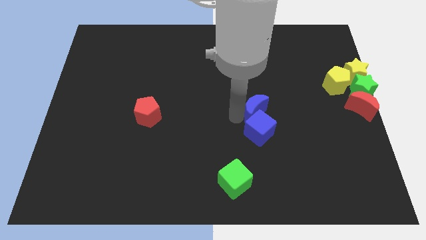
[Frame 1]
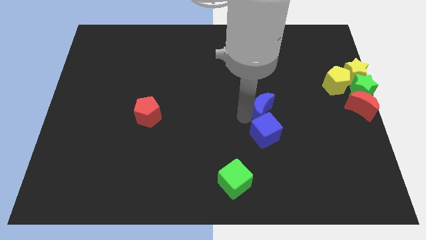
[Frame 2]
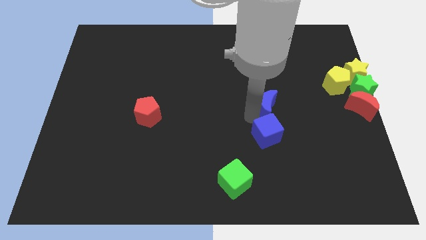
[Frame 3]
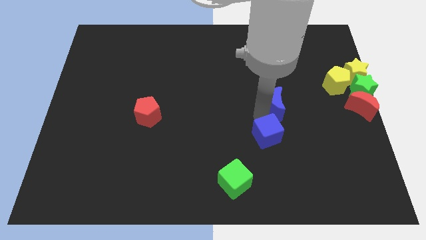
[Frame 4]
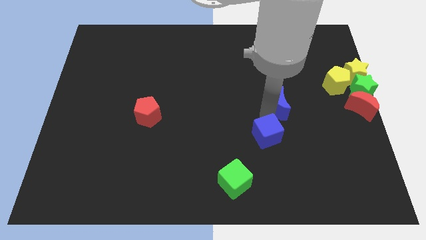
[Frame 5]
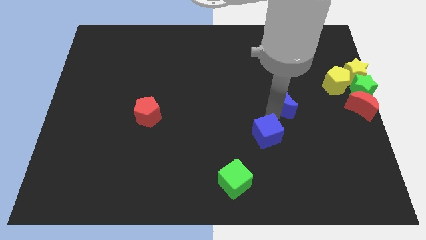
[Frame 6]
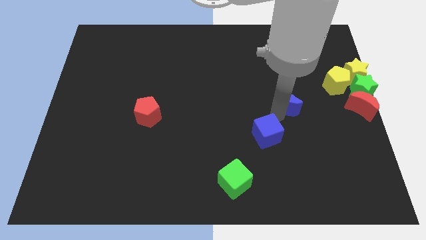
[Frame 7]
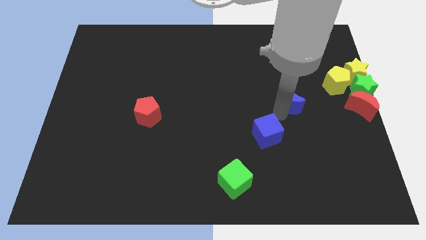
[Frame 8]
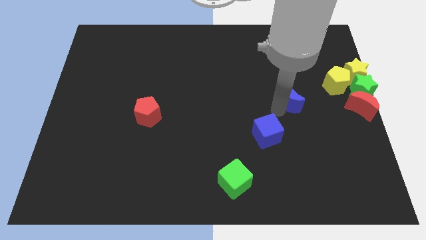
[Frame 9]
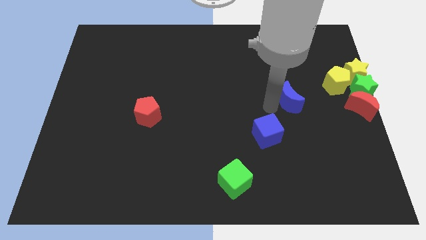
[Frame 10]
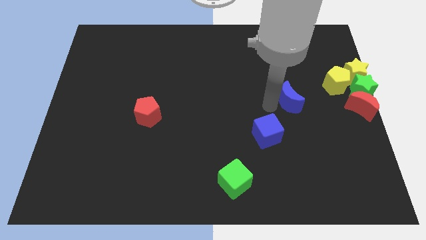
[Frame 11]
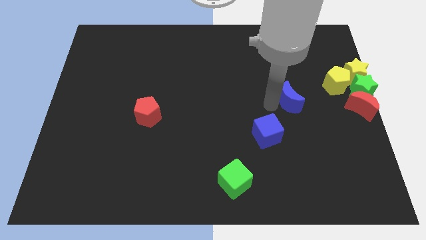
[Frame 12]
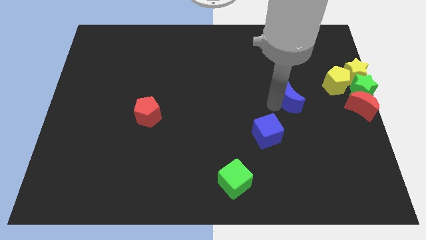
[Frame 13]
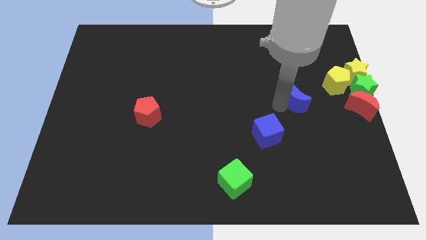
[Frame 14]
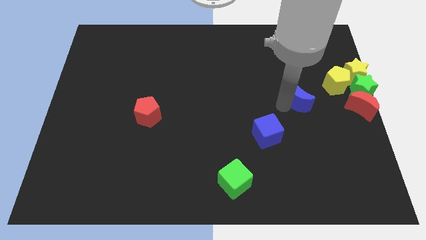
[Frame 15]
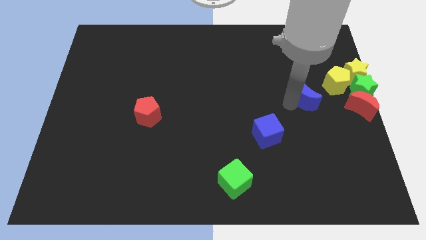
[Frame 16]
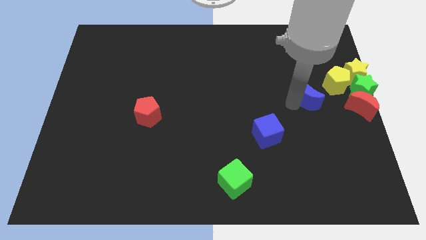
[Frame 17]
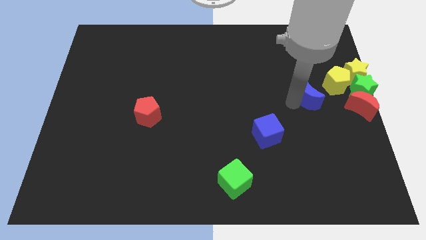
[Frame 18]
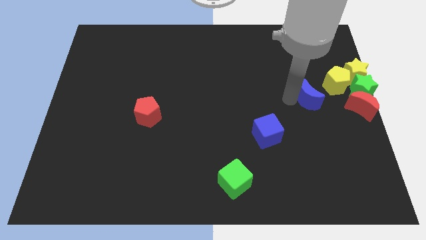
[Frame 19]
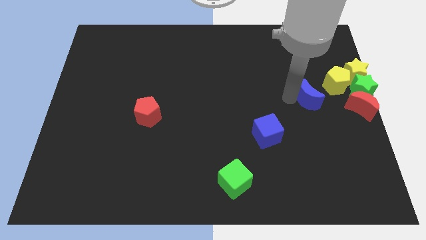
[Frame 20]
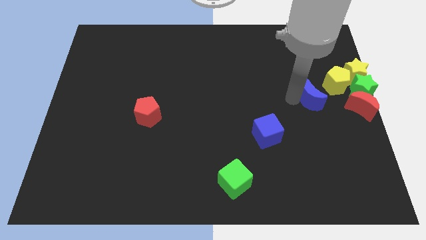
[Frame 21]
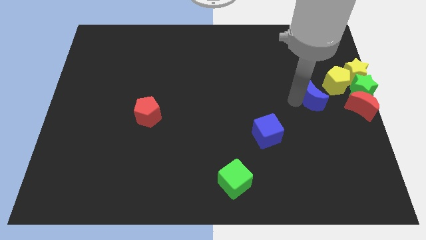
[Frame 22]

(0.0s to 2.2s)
push the blue moon away from the blue cube

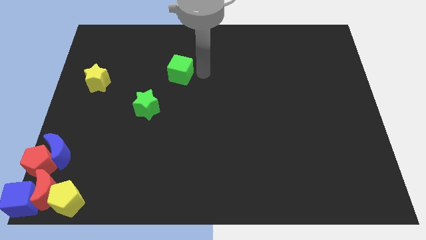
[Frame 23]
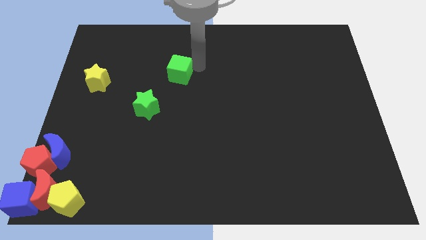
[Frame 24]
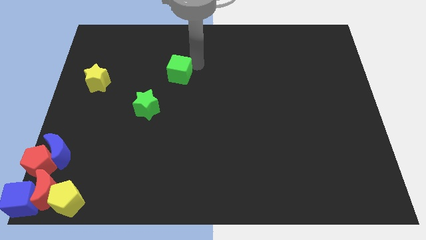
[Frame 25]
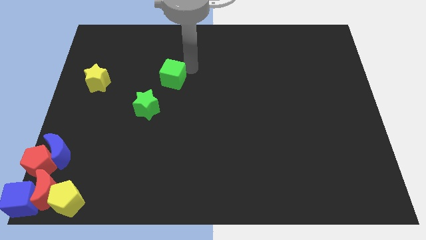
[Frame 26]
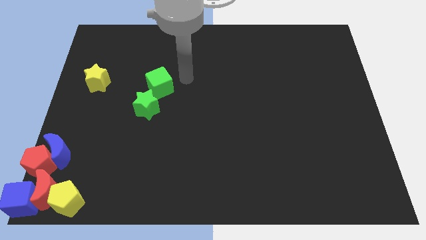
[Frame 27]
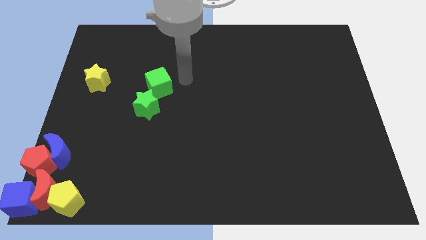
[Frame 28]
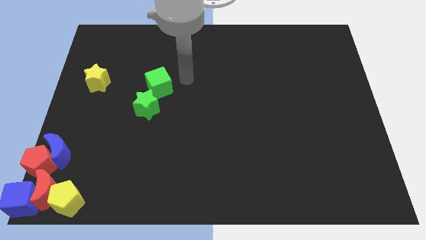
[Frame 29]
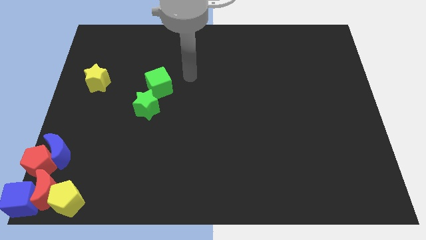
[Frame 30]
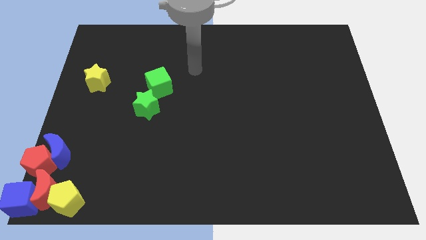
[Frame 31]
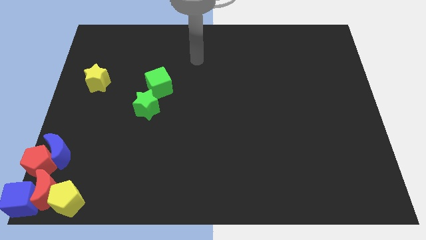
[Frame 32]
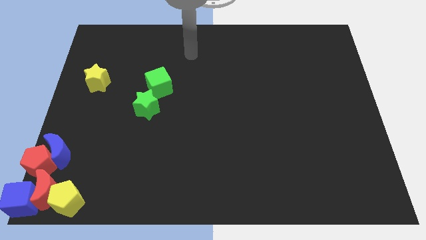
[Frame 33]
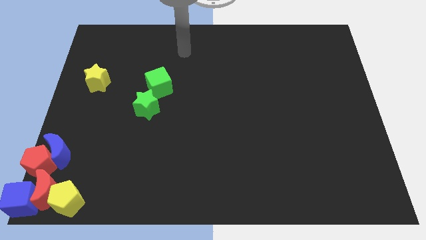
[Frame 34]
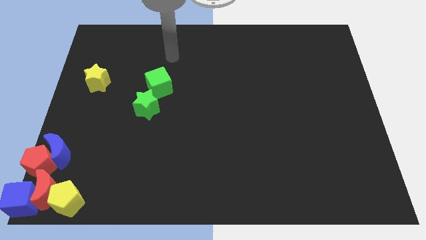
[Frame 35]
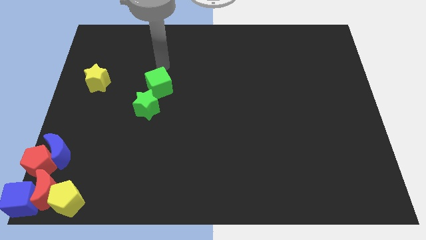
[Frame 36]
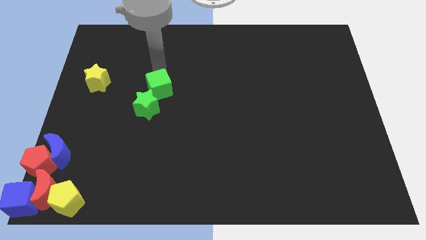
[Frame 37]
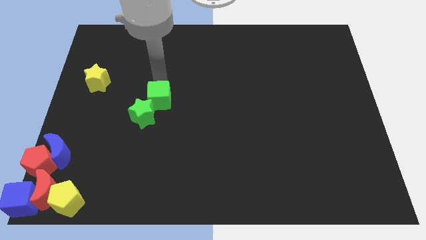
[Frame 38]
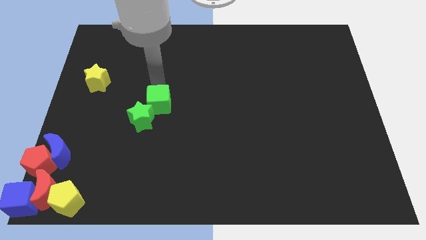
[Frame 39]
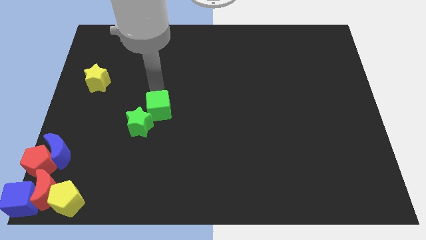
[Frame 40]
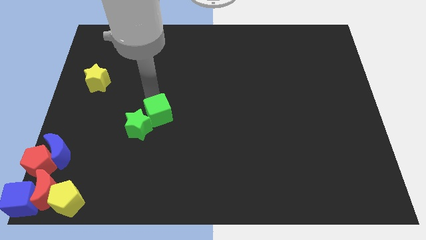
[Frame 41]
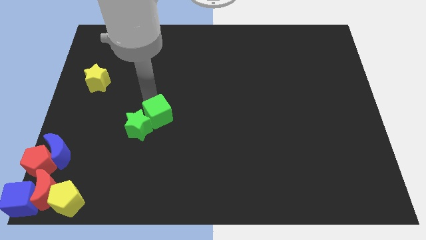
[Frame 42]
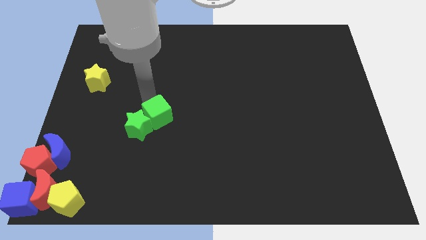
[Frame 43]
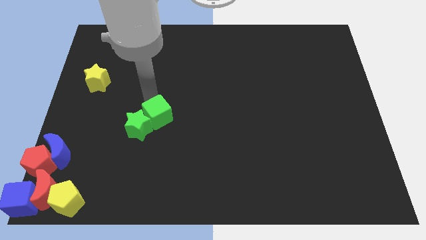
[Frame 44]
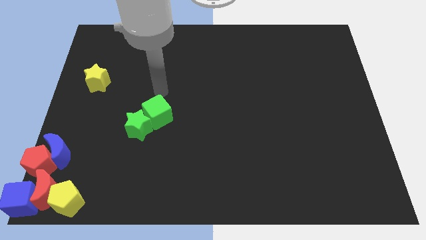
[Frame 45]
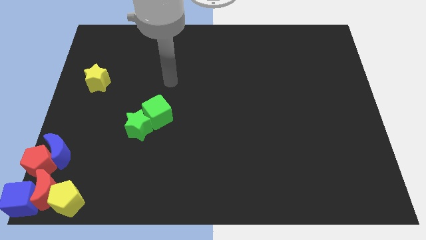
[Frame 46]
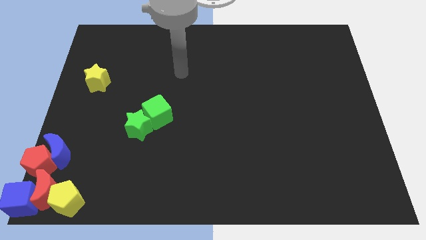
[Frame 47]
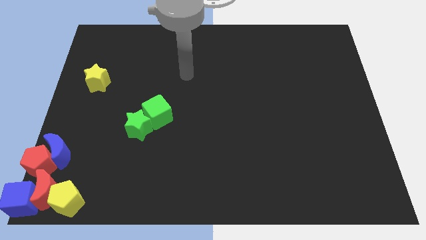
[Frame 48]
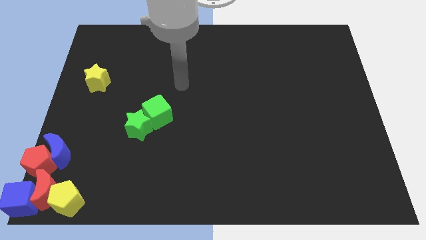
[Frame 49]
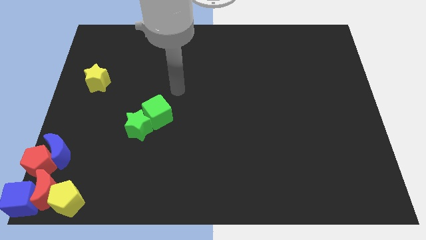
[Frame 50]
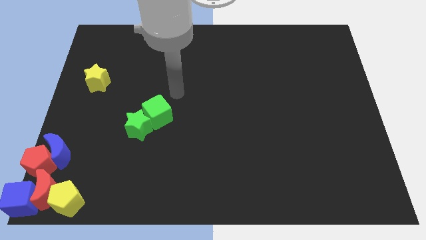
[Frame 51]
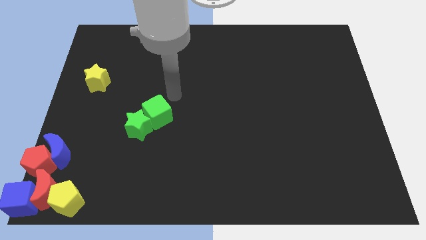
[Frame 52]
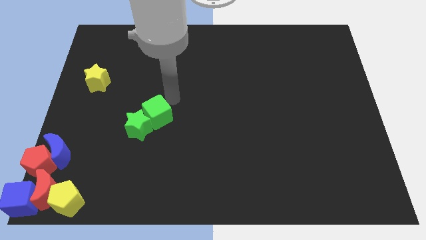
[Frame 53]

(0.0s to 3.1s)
push the green cube into the green star

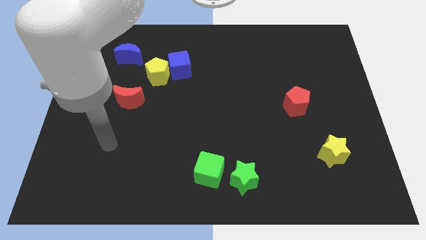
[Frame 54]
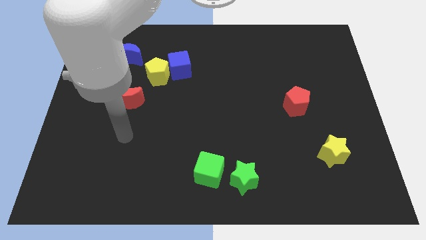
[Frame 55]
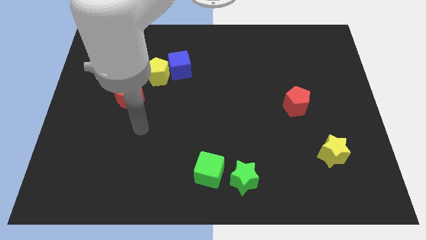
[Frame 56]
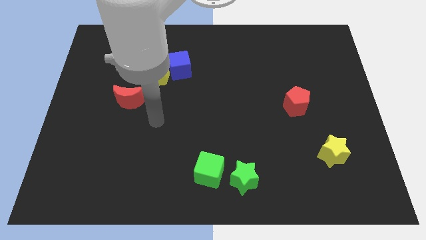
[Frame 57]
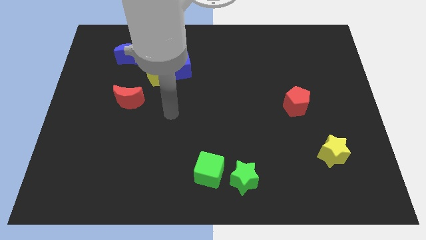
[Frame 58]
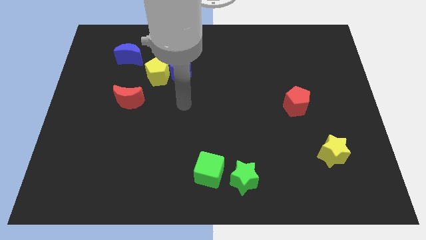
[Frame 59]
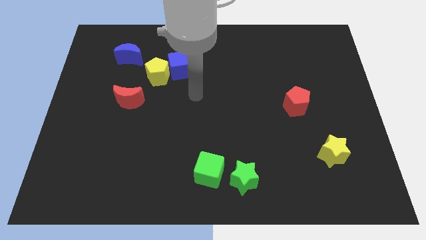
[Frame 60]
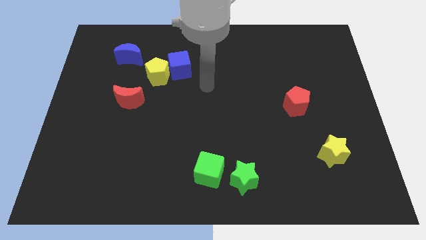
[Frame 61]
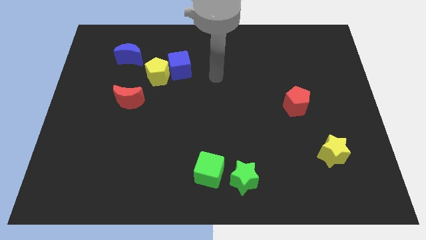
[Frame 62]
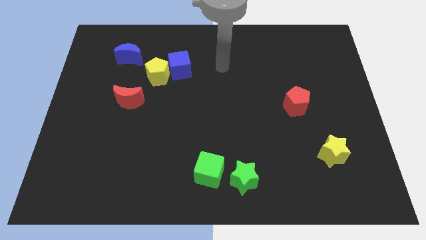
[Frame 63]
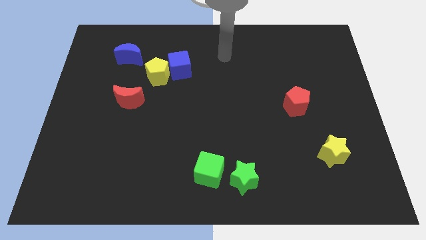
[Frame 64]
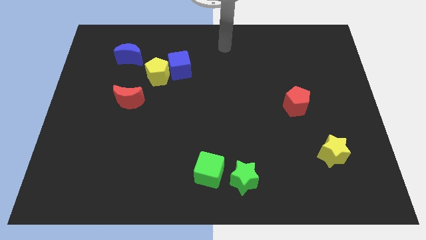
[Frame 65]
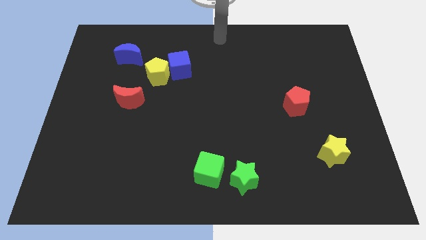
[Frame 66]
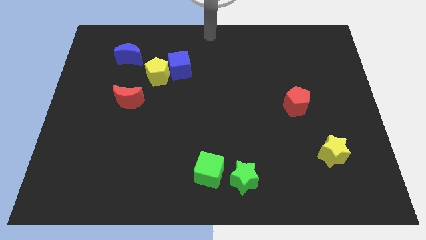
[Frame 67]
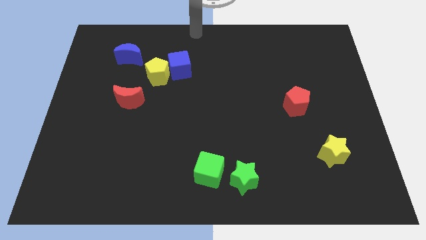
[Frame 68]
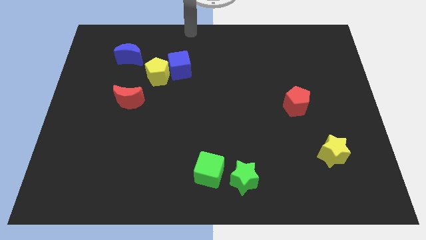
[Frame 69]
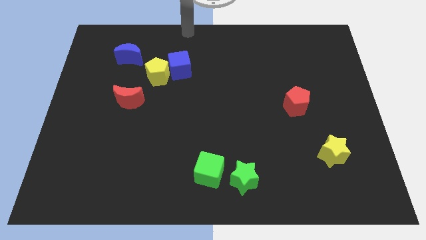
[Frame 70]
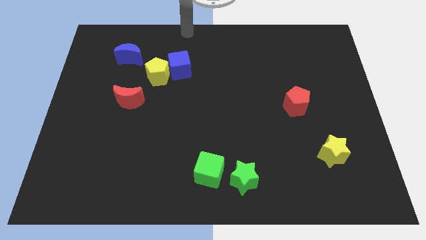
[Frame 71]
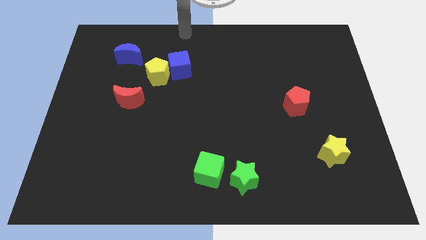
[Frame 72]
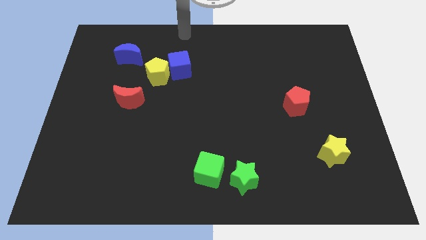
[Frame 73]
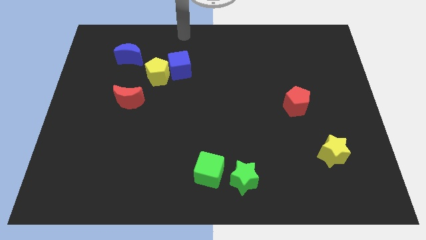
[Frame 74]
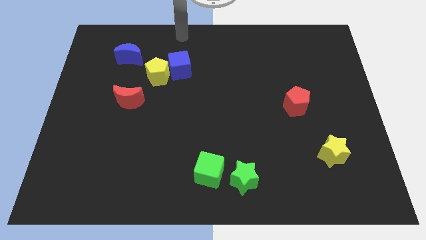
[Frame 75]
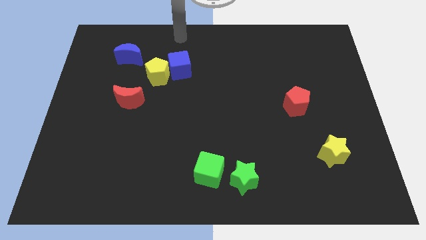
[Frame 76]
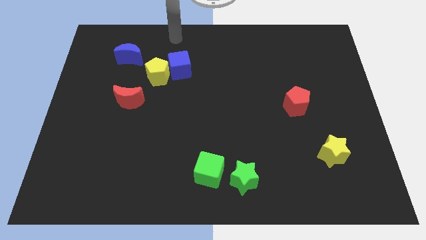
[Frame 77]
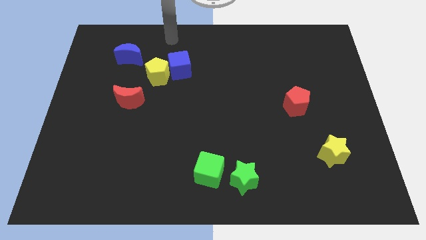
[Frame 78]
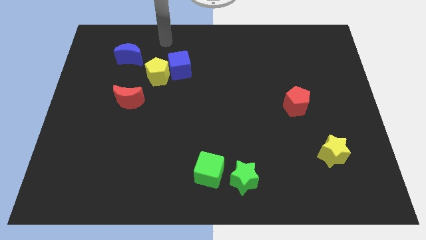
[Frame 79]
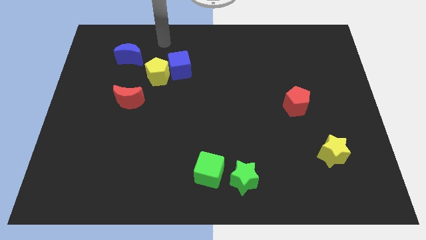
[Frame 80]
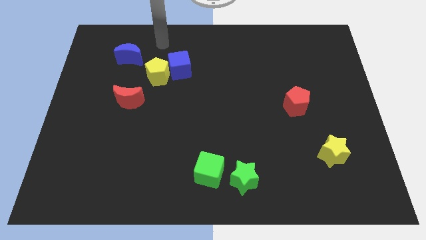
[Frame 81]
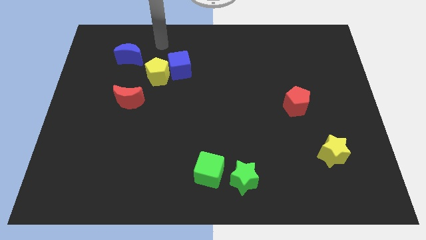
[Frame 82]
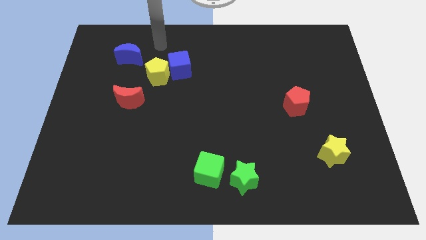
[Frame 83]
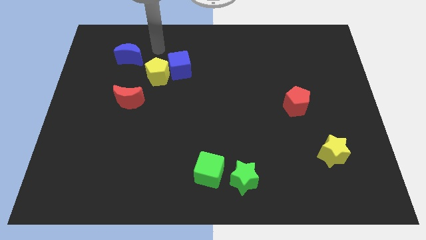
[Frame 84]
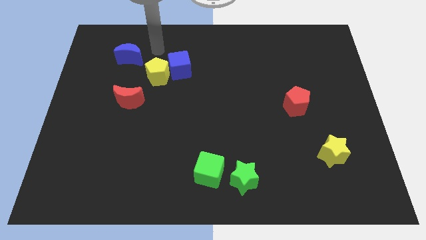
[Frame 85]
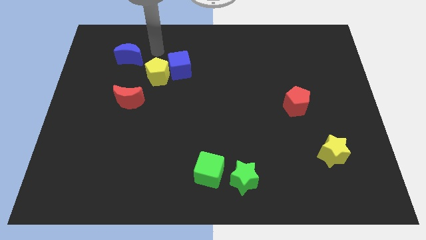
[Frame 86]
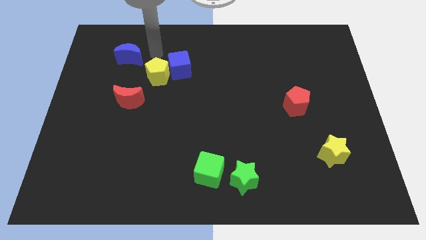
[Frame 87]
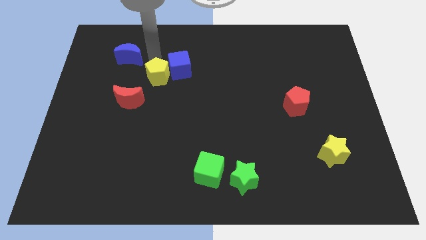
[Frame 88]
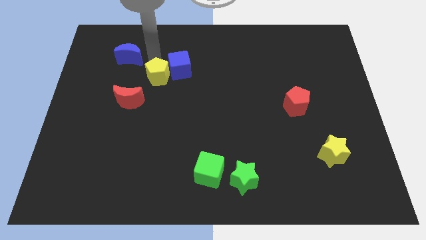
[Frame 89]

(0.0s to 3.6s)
move your arm above the yellow pentagon
